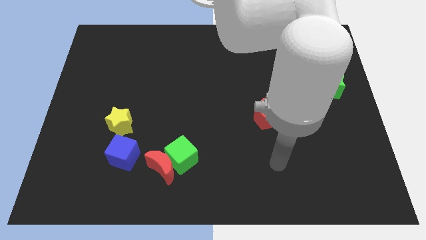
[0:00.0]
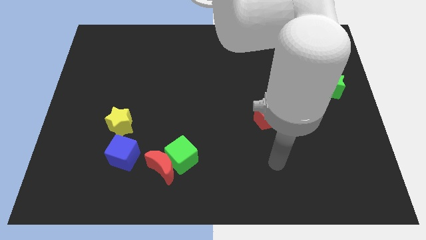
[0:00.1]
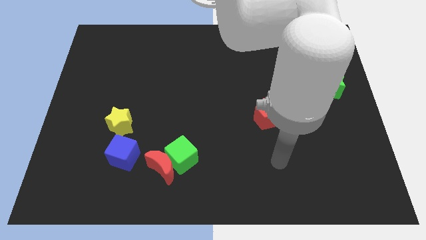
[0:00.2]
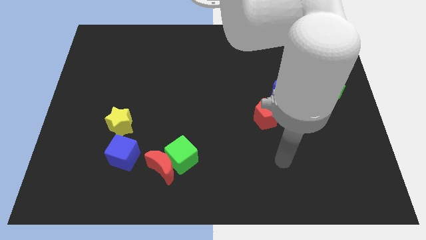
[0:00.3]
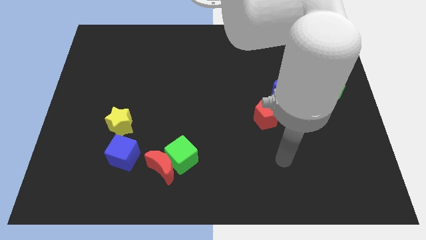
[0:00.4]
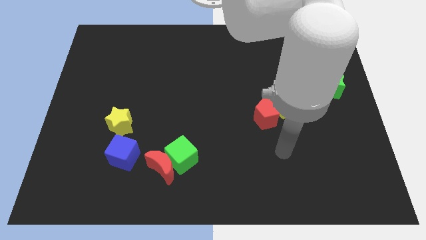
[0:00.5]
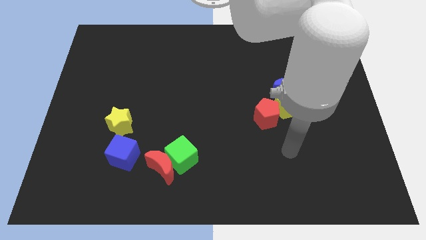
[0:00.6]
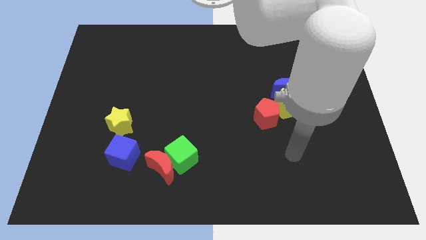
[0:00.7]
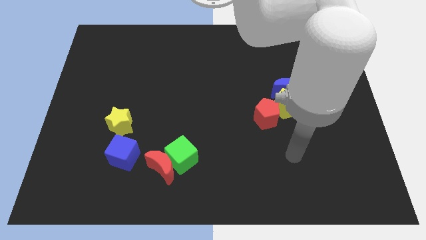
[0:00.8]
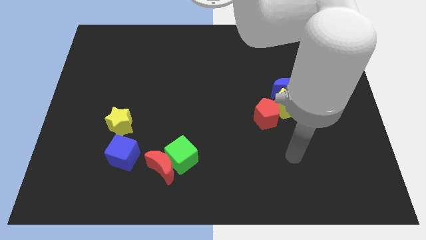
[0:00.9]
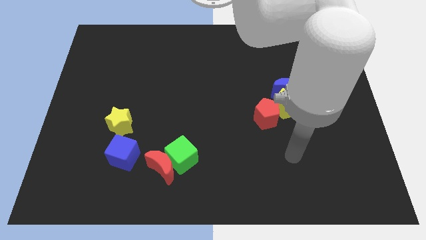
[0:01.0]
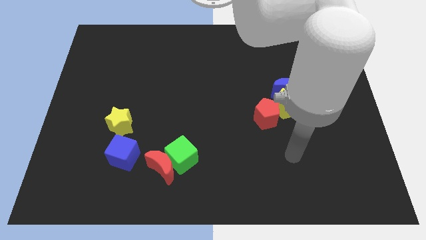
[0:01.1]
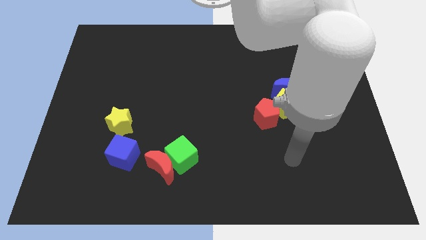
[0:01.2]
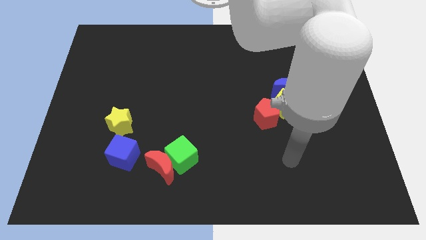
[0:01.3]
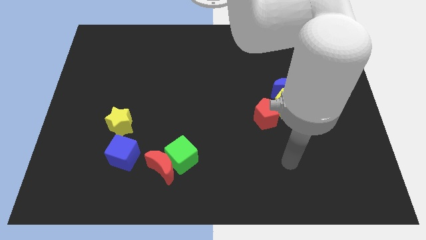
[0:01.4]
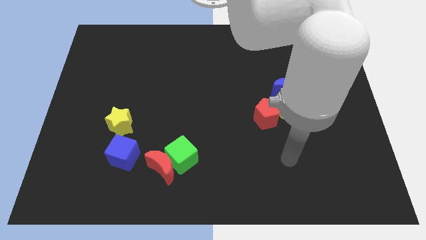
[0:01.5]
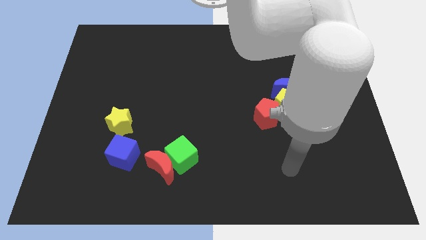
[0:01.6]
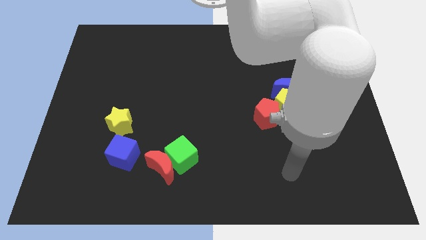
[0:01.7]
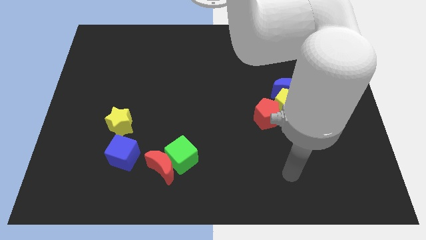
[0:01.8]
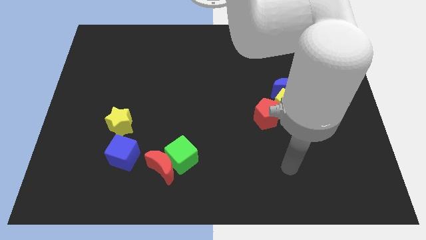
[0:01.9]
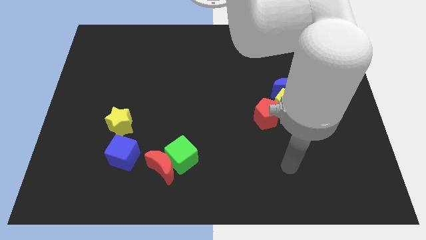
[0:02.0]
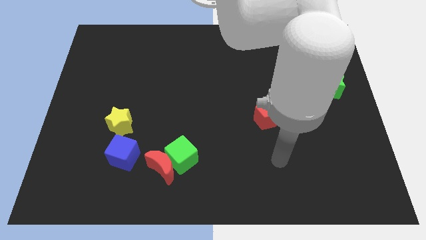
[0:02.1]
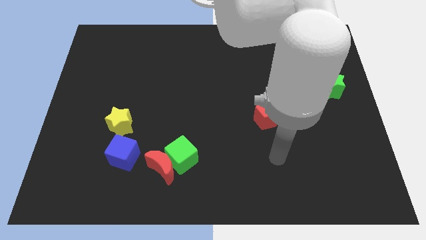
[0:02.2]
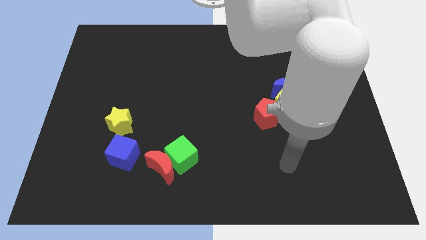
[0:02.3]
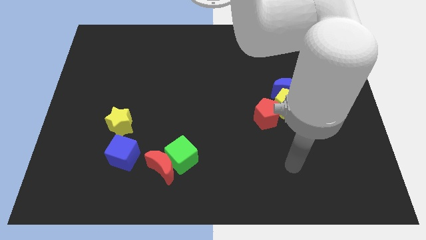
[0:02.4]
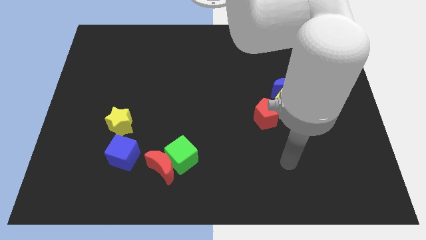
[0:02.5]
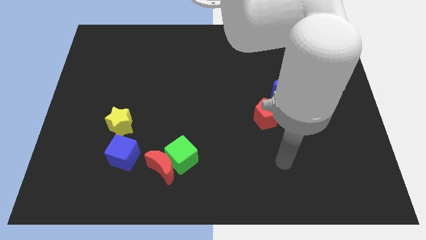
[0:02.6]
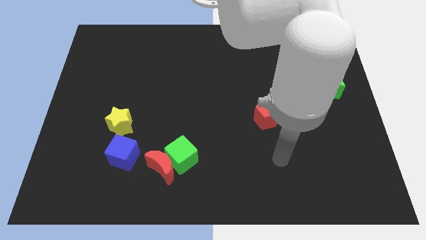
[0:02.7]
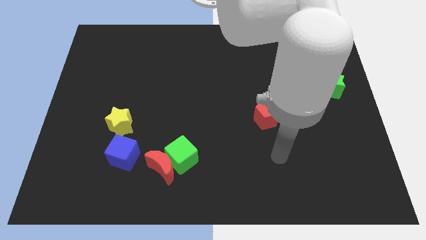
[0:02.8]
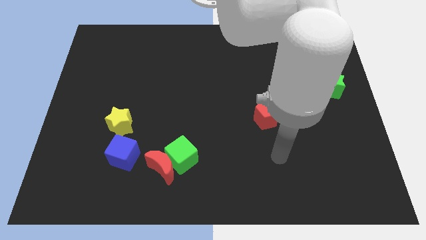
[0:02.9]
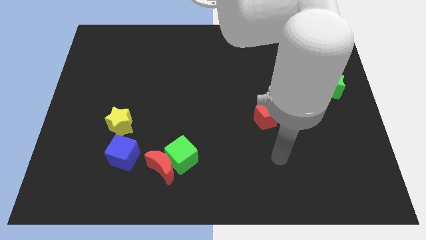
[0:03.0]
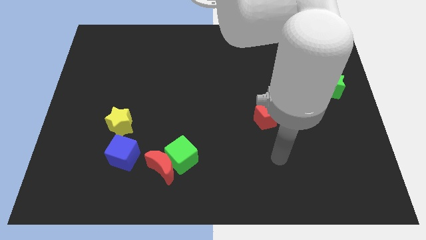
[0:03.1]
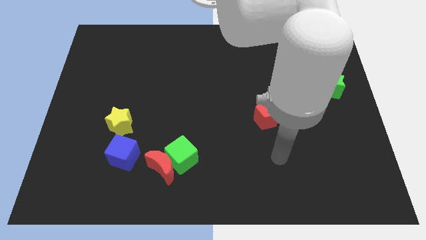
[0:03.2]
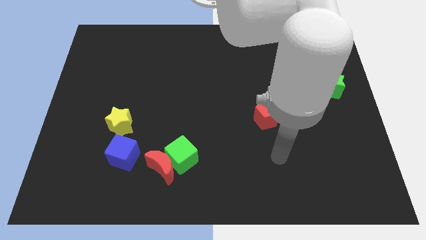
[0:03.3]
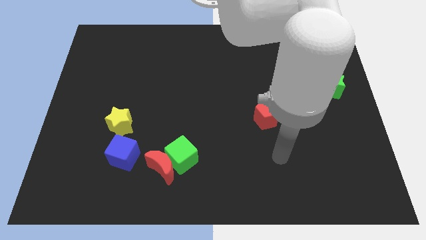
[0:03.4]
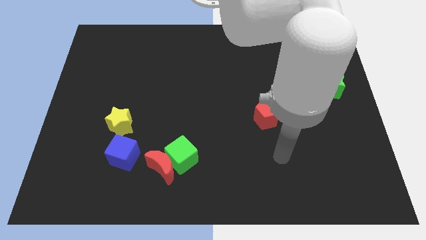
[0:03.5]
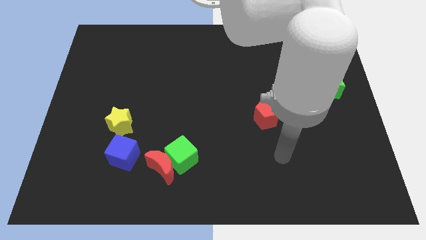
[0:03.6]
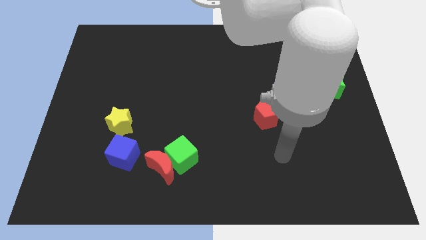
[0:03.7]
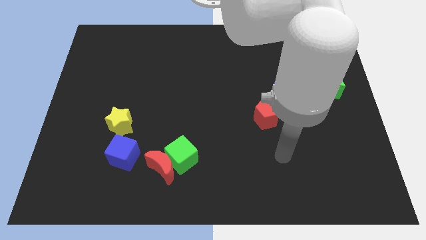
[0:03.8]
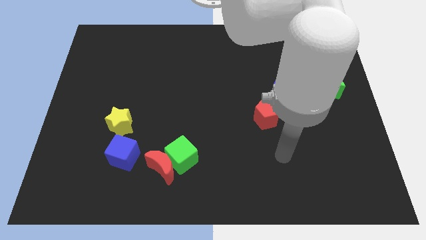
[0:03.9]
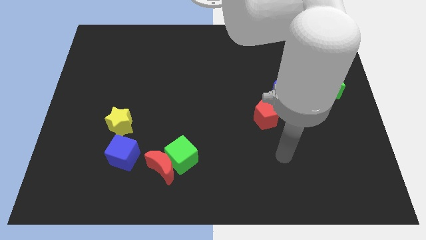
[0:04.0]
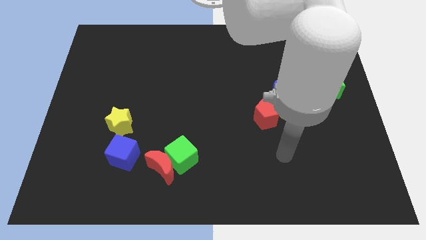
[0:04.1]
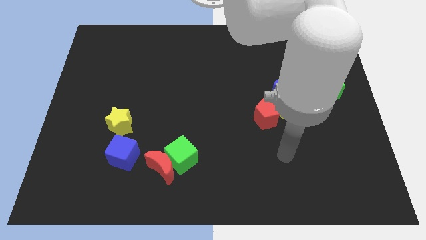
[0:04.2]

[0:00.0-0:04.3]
place your arm below the red pentagon

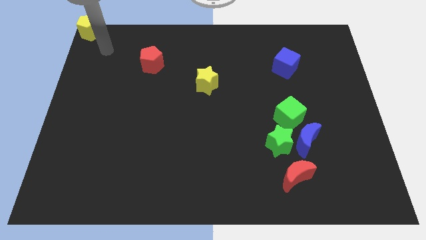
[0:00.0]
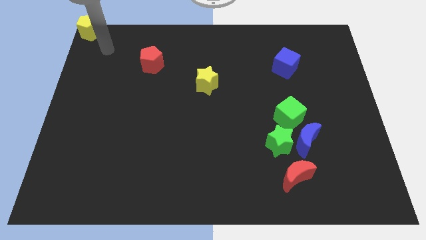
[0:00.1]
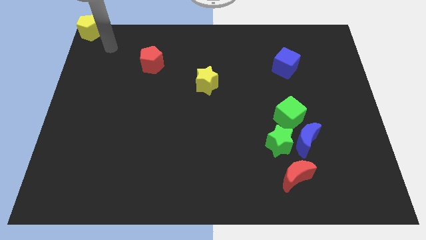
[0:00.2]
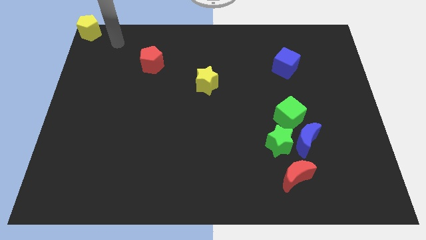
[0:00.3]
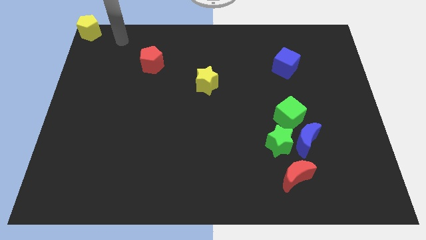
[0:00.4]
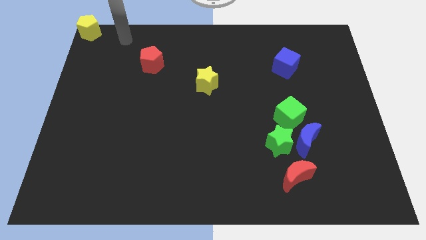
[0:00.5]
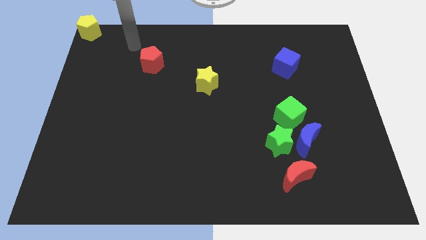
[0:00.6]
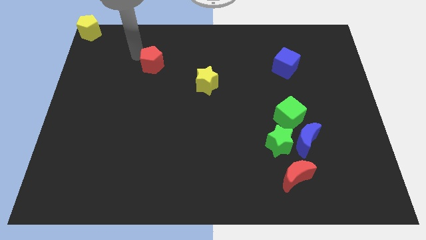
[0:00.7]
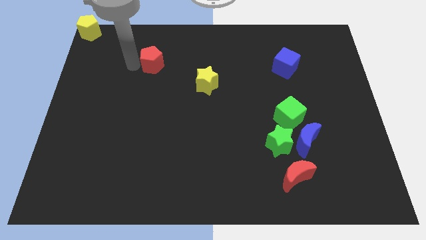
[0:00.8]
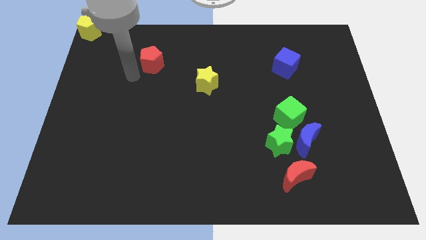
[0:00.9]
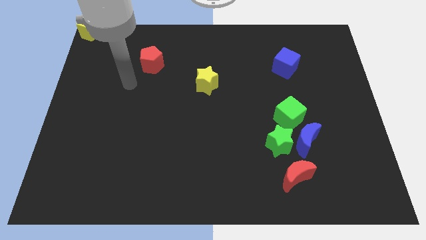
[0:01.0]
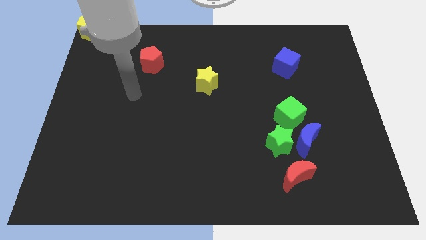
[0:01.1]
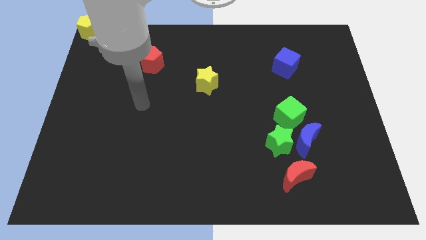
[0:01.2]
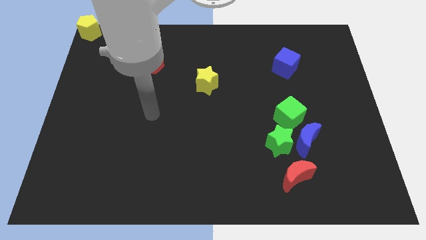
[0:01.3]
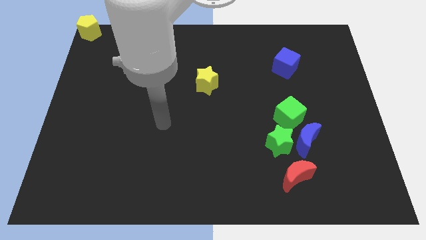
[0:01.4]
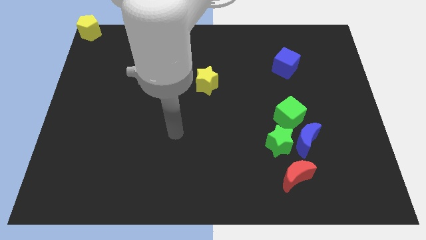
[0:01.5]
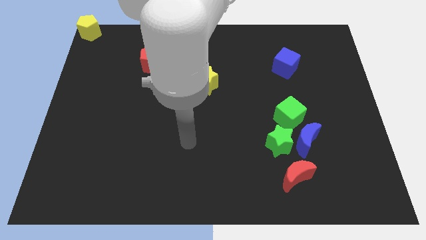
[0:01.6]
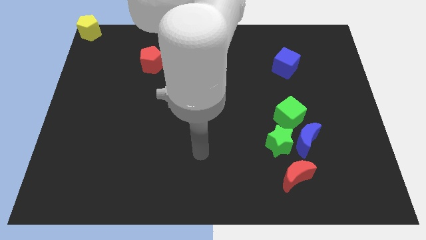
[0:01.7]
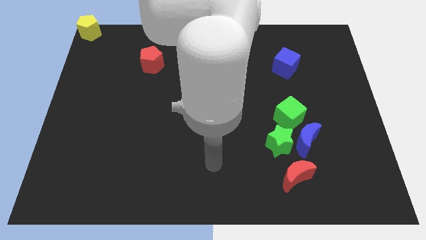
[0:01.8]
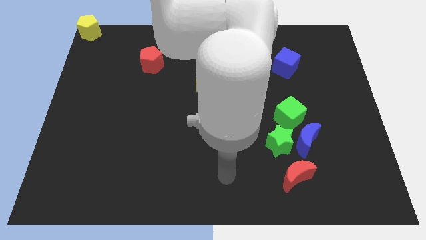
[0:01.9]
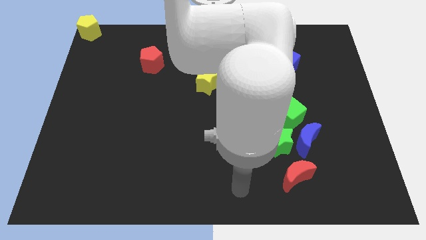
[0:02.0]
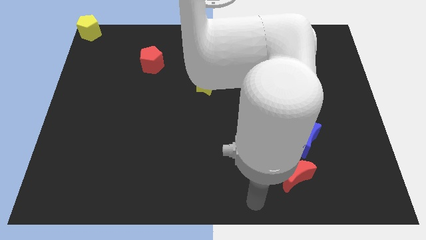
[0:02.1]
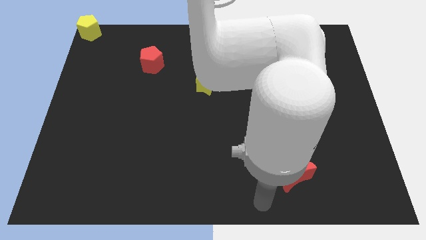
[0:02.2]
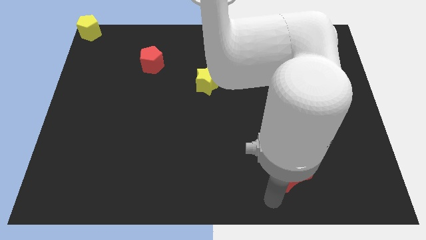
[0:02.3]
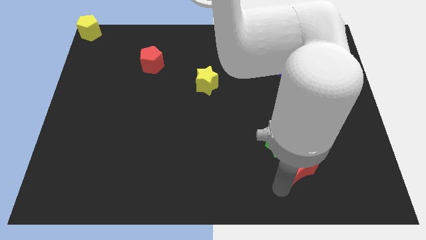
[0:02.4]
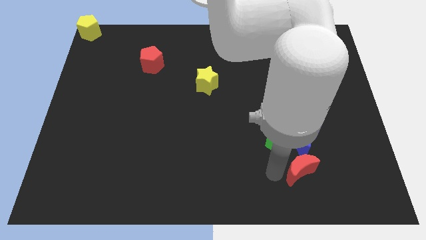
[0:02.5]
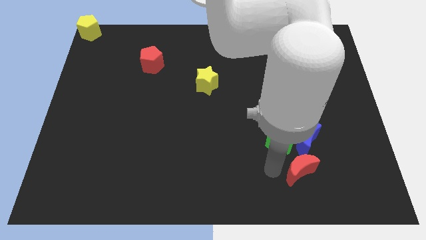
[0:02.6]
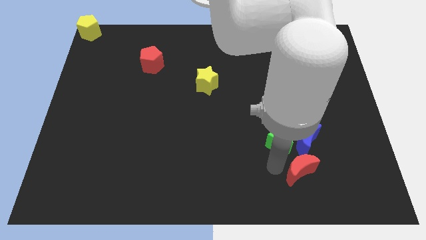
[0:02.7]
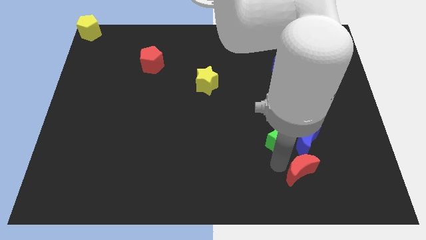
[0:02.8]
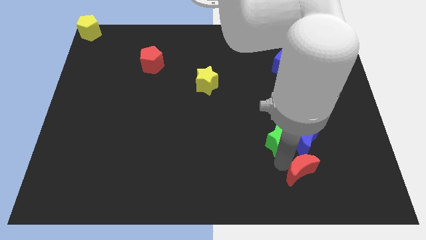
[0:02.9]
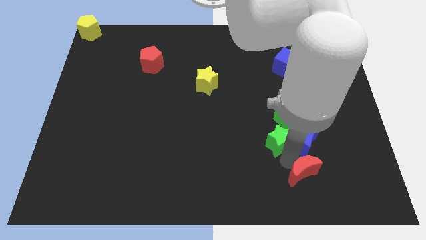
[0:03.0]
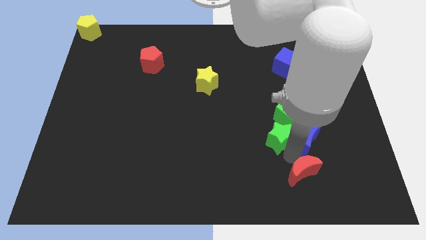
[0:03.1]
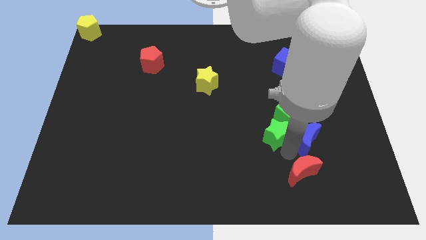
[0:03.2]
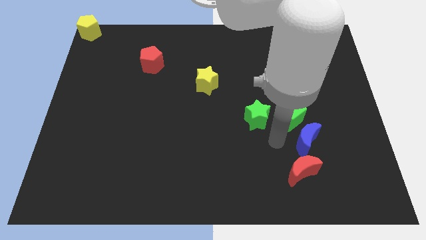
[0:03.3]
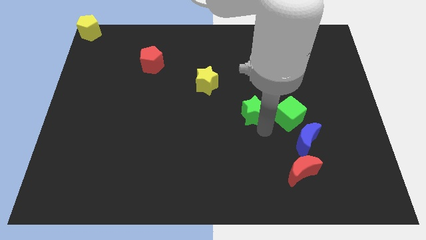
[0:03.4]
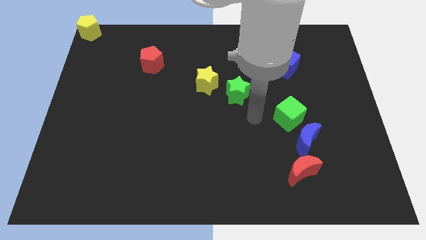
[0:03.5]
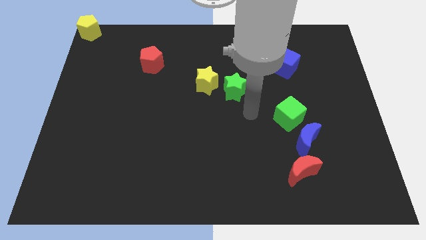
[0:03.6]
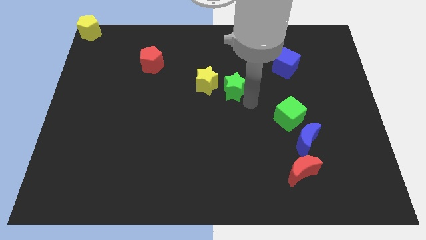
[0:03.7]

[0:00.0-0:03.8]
push the green star to the center beside yellow star

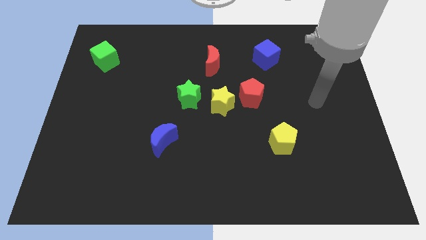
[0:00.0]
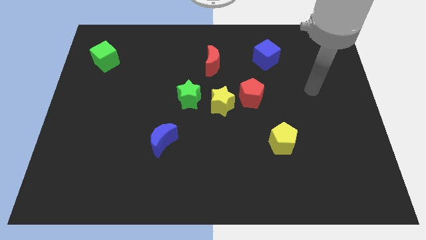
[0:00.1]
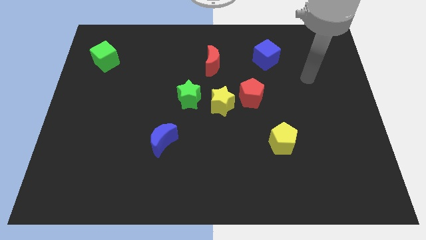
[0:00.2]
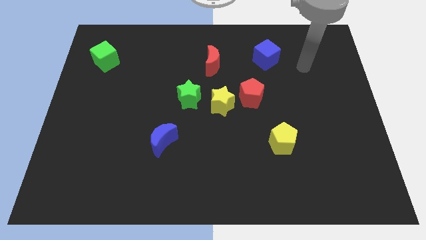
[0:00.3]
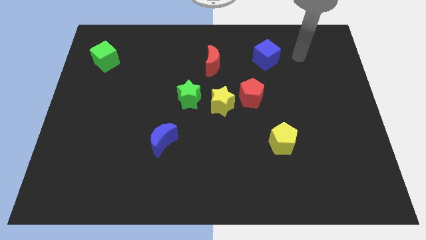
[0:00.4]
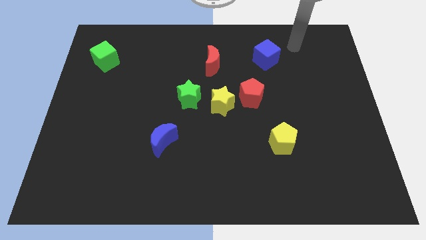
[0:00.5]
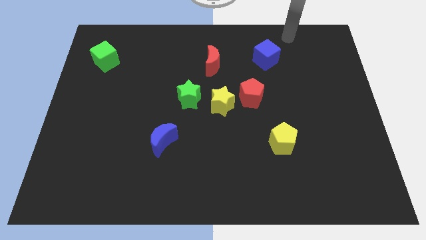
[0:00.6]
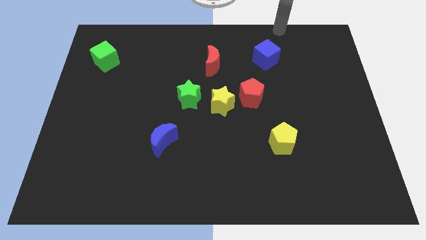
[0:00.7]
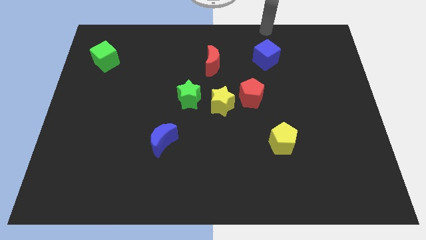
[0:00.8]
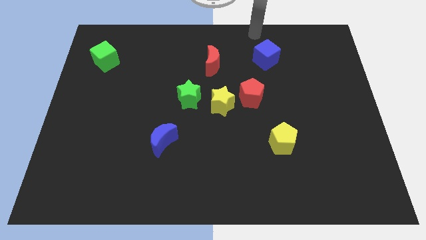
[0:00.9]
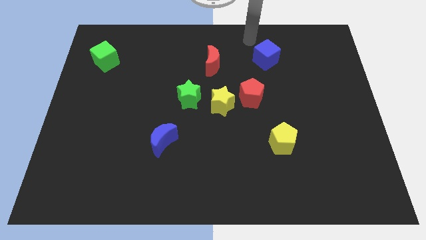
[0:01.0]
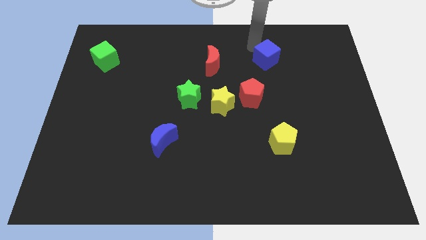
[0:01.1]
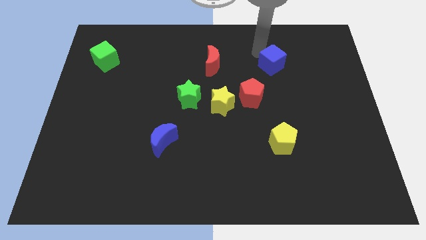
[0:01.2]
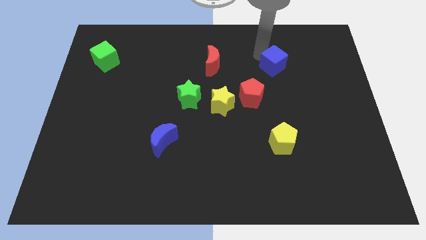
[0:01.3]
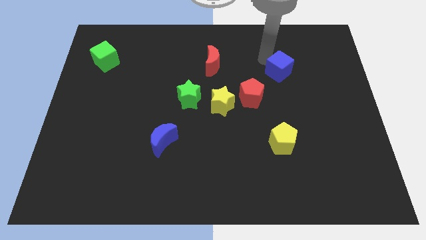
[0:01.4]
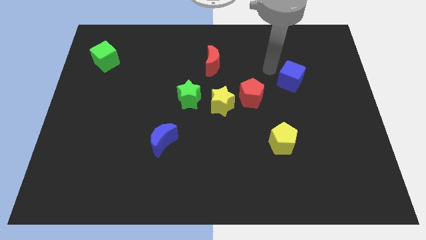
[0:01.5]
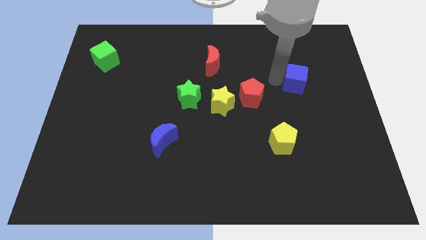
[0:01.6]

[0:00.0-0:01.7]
push the blue cube to the top right of the red pentagon
